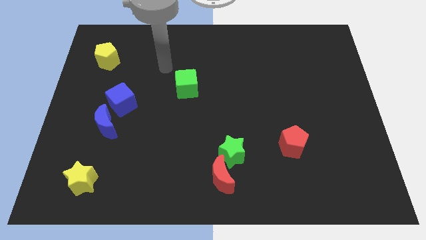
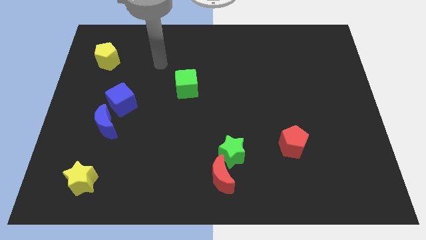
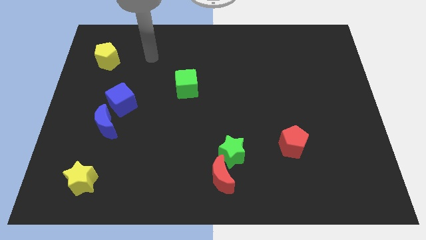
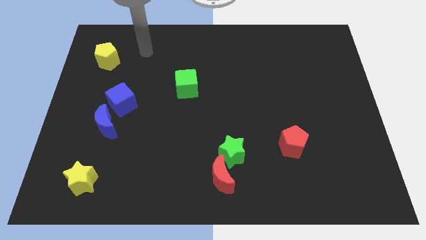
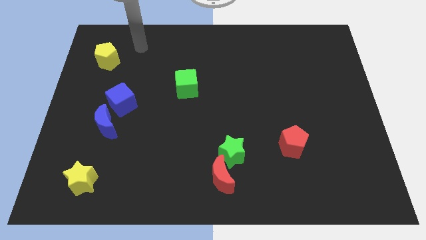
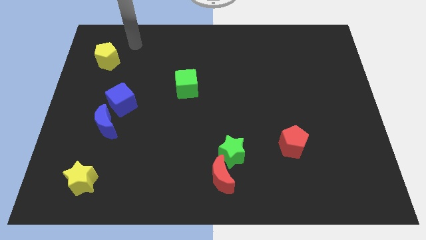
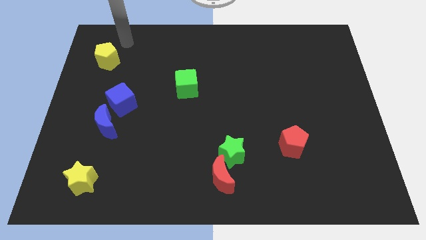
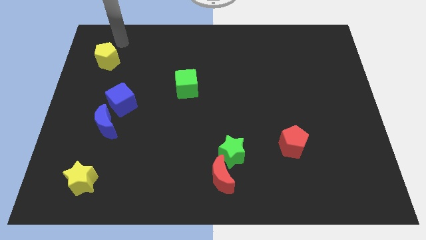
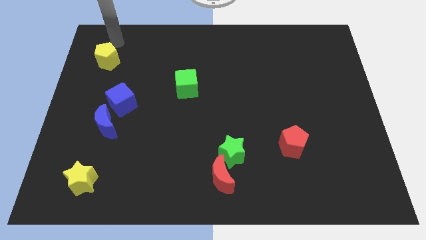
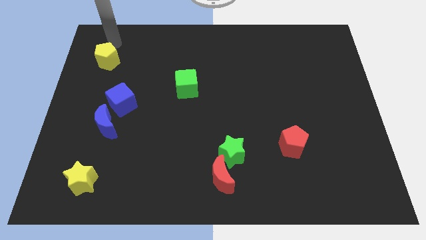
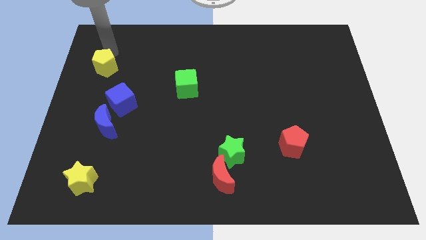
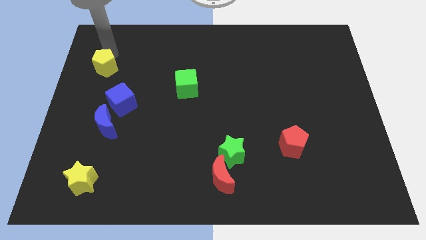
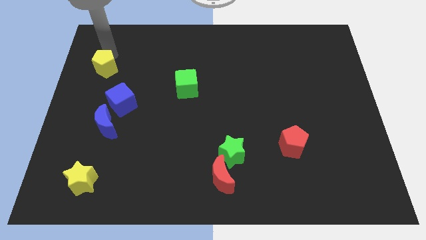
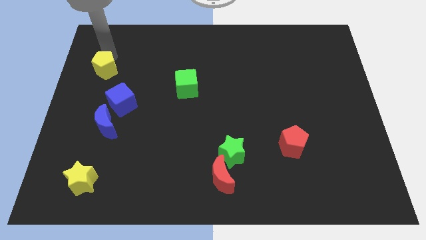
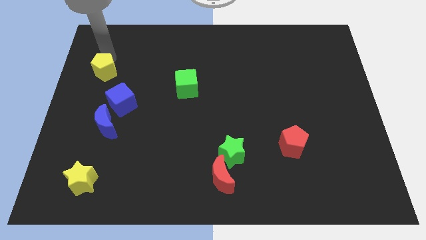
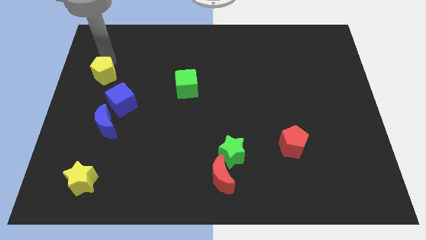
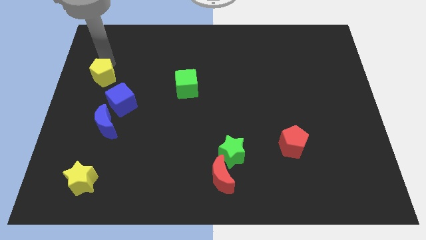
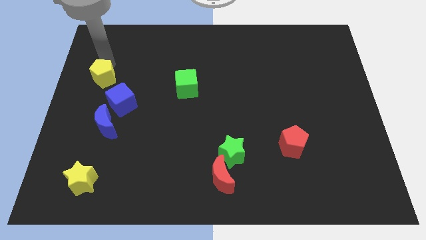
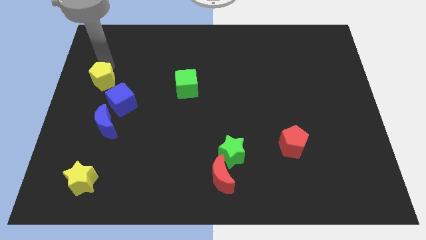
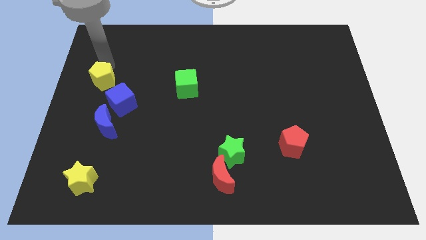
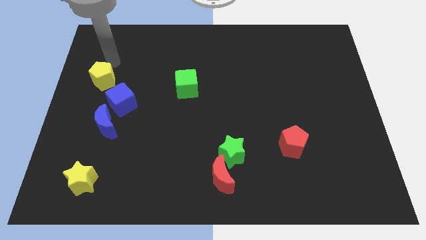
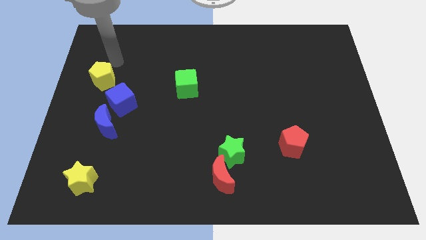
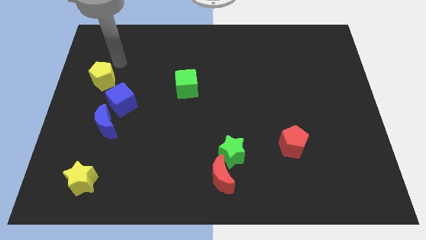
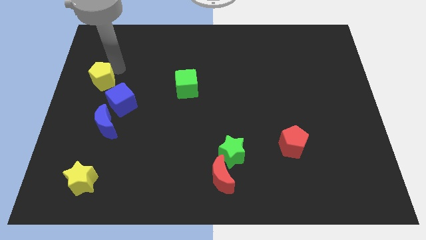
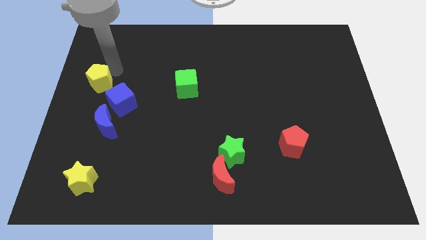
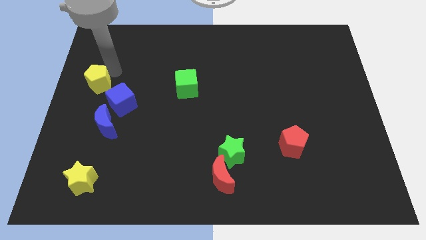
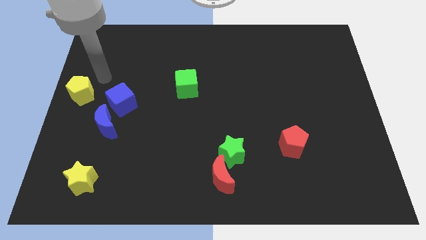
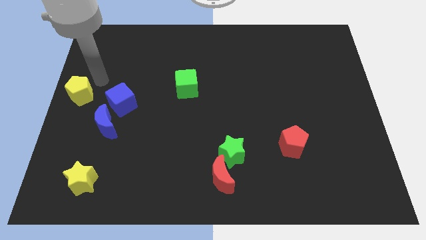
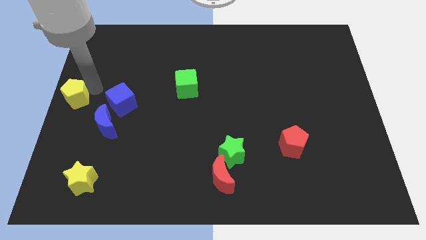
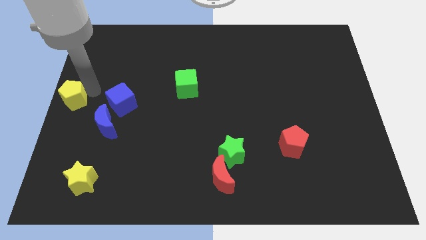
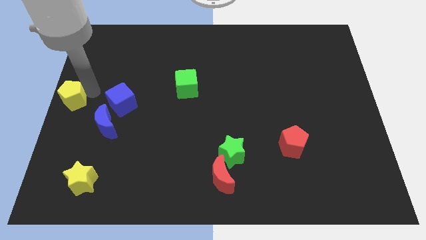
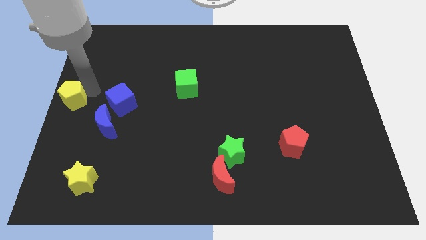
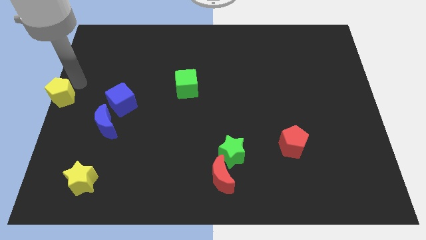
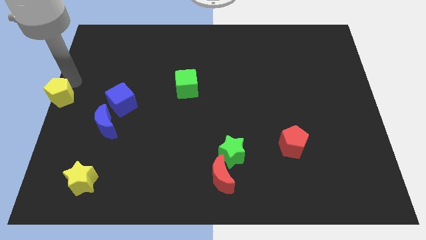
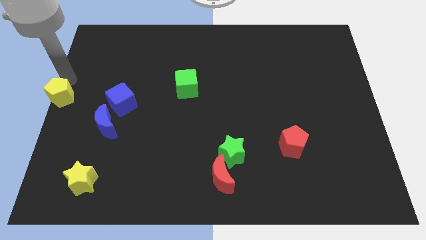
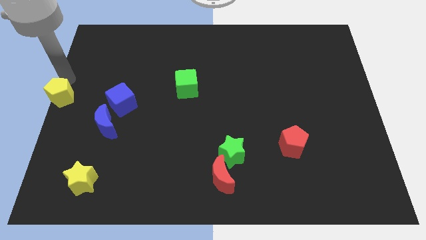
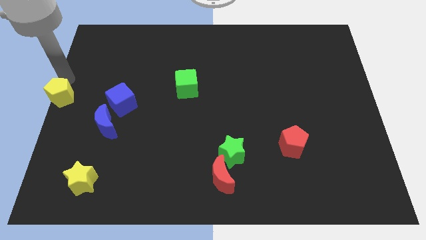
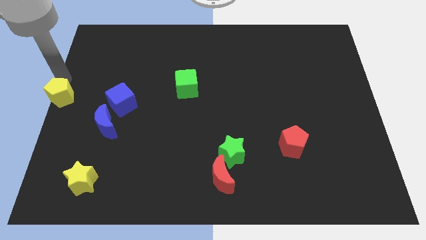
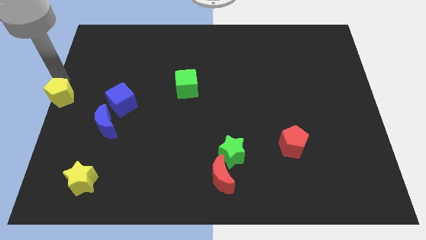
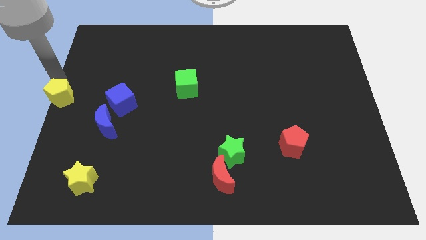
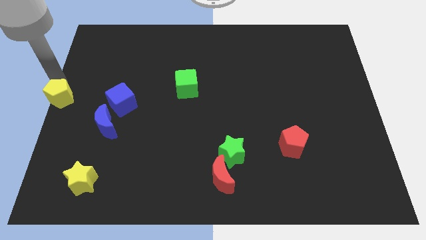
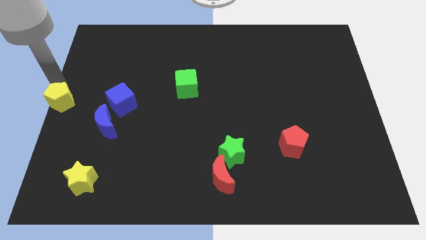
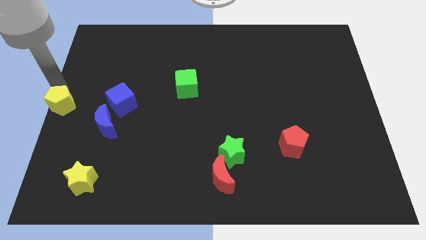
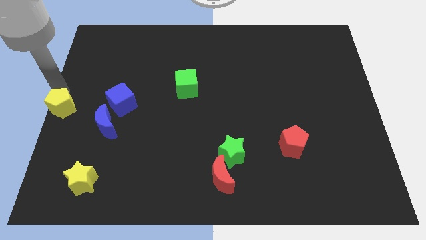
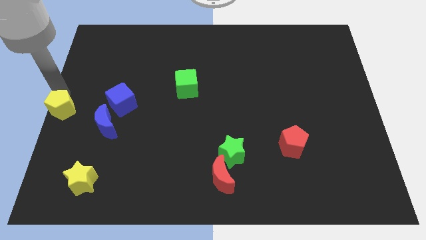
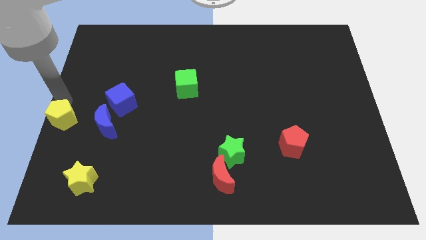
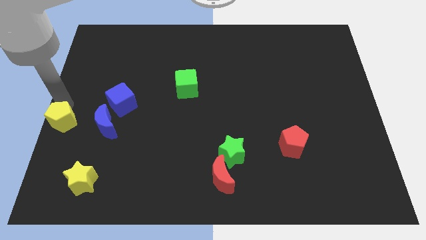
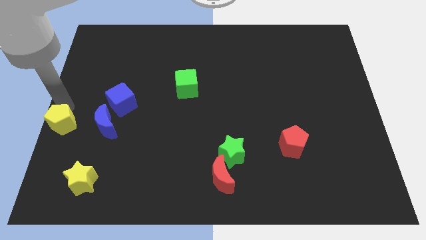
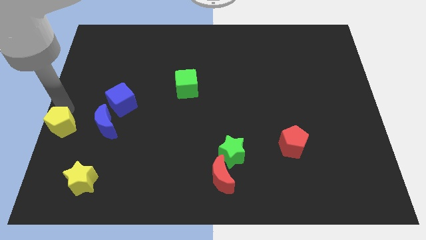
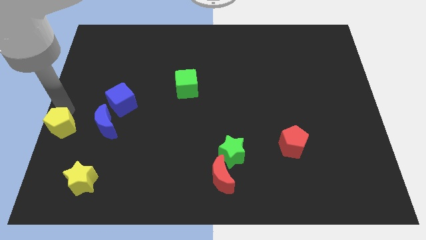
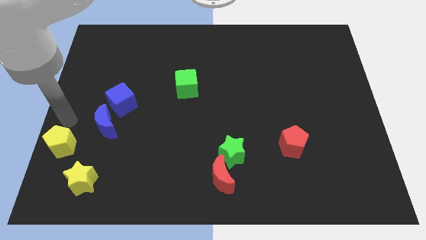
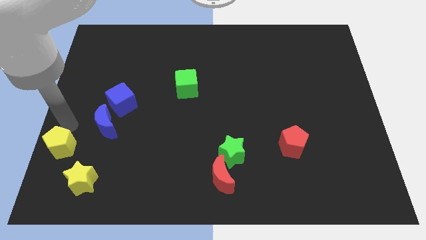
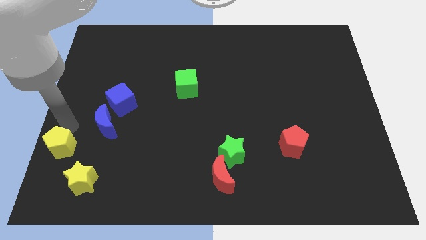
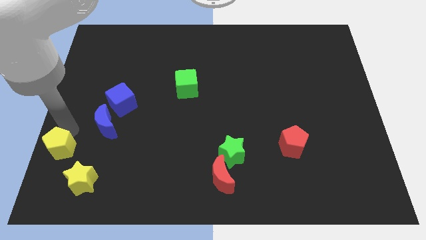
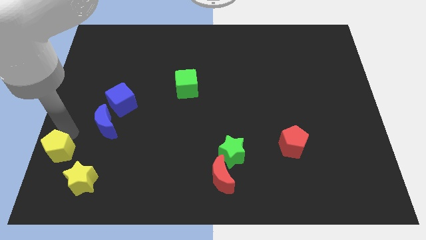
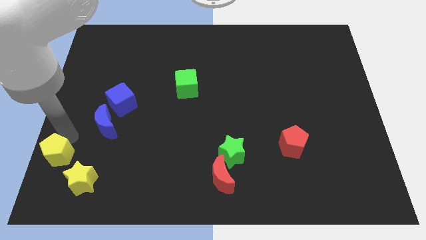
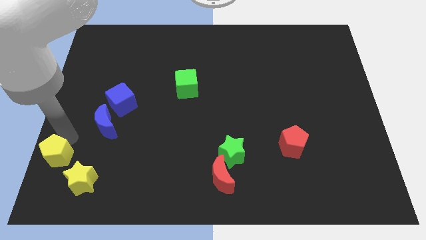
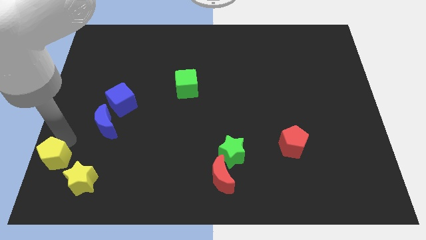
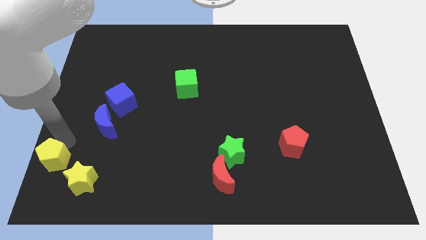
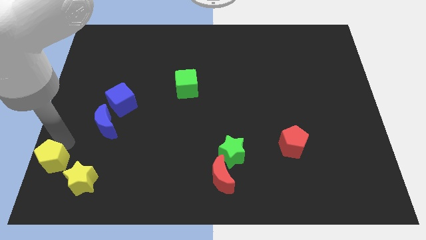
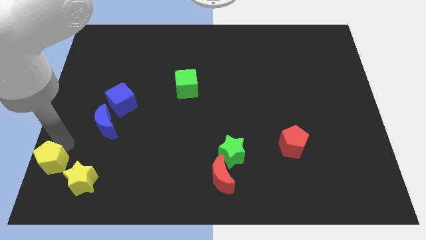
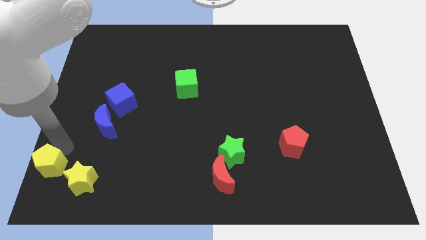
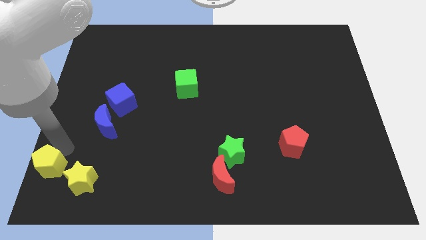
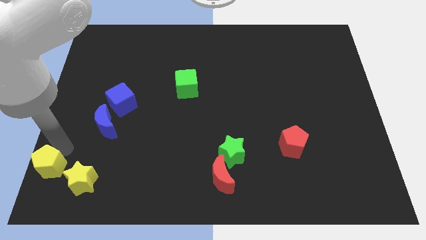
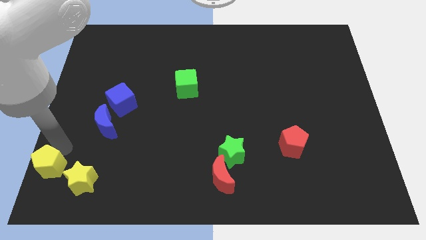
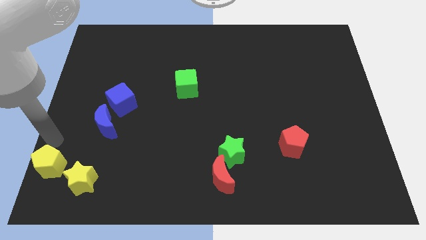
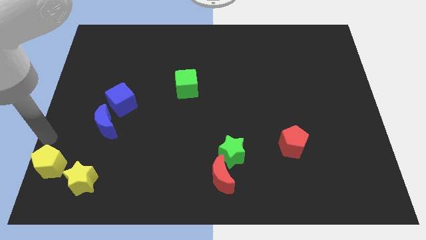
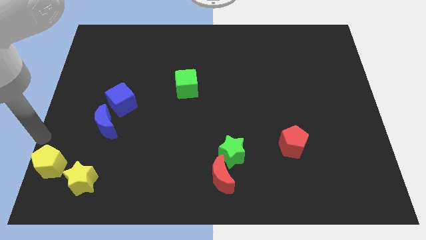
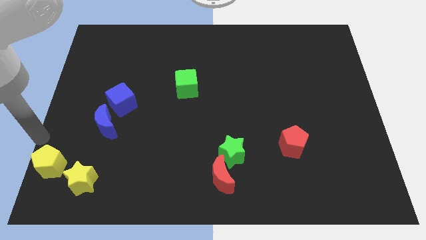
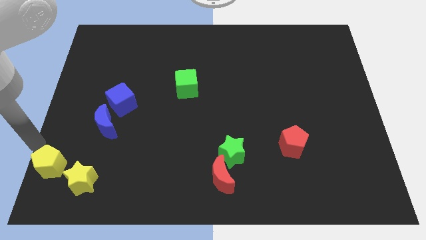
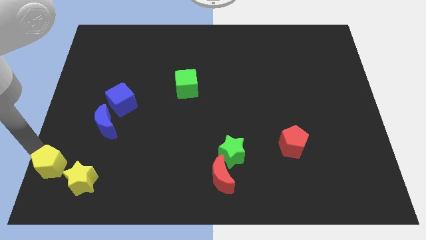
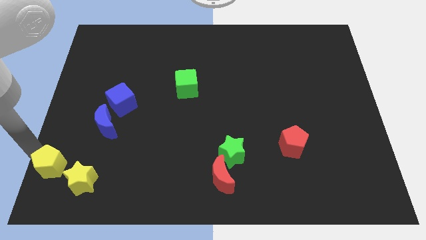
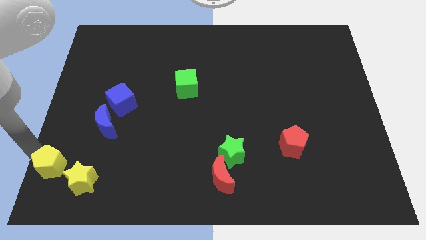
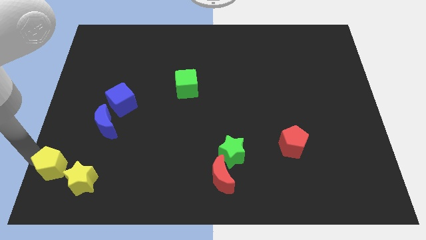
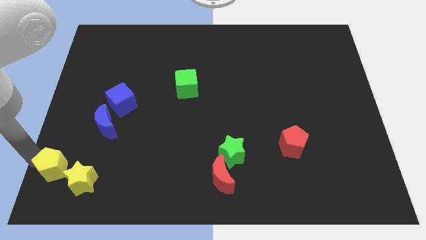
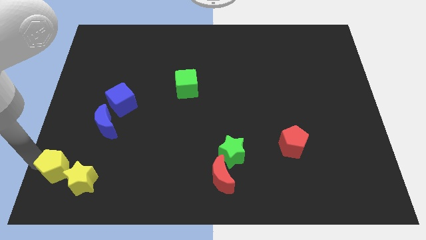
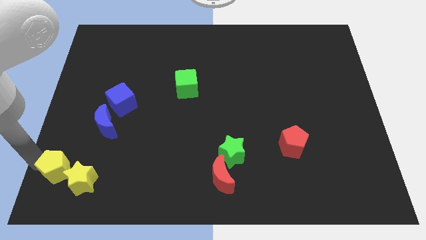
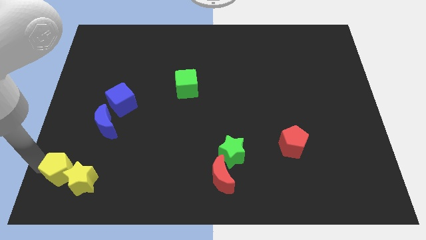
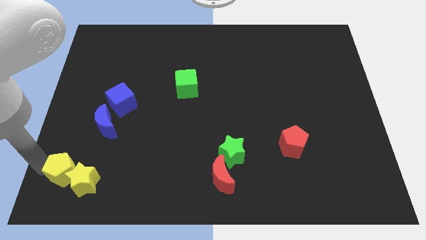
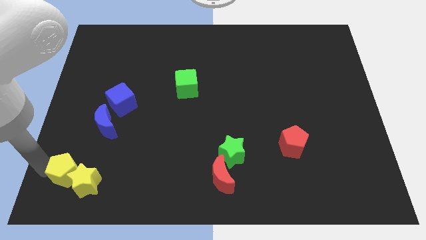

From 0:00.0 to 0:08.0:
push the yellow pentagon close to the yellow star

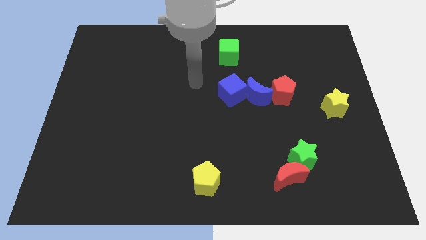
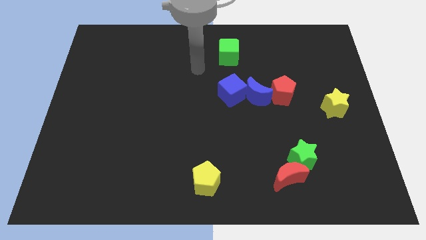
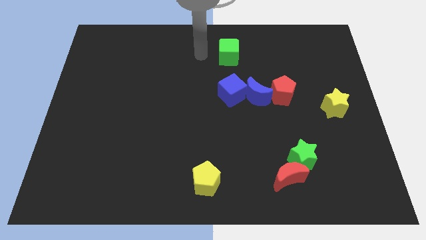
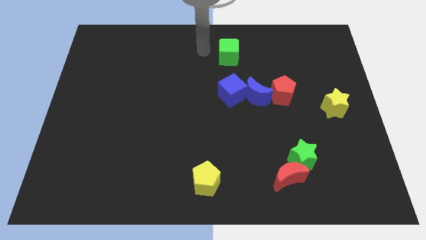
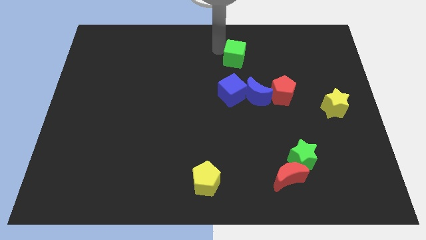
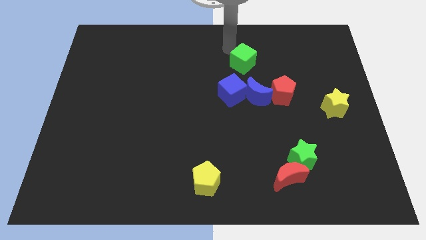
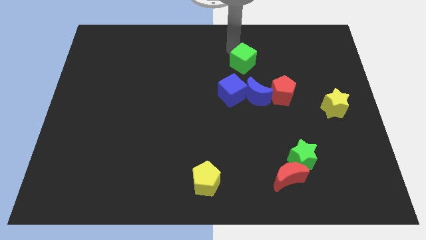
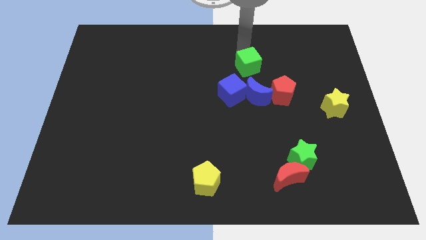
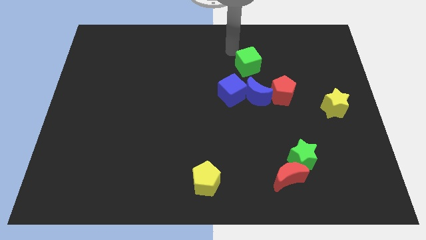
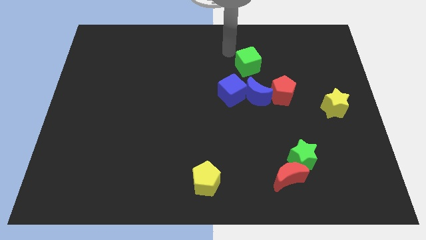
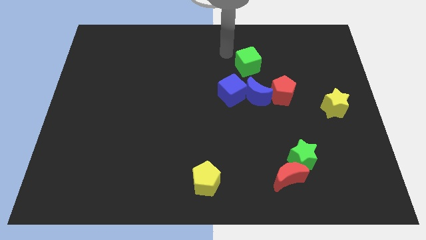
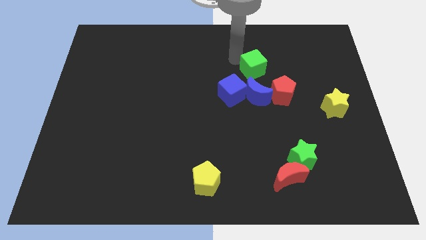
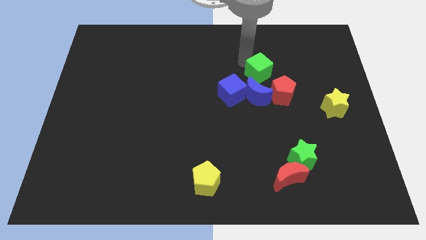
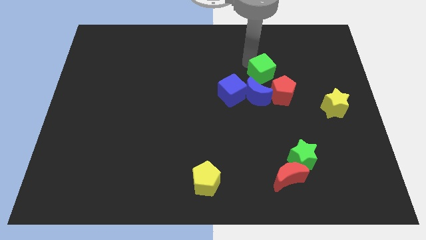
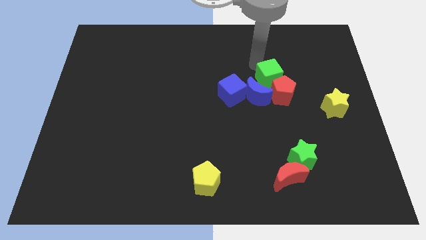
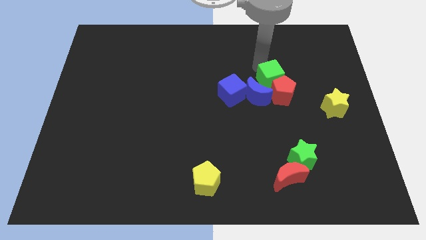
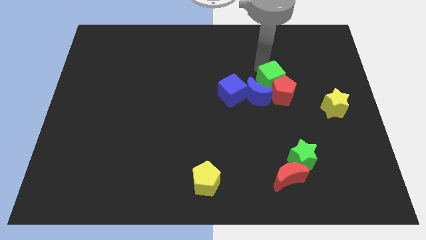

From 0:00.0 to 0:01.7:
push the green cube next to the red pentagon
